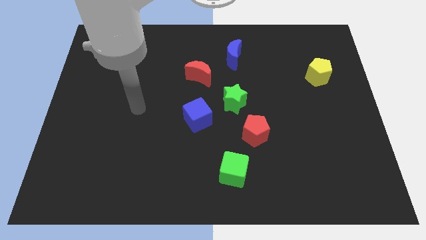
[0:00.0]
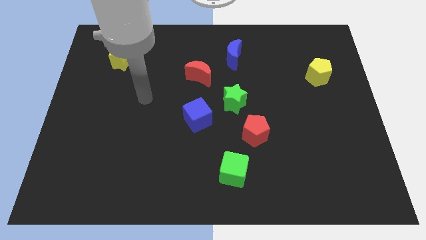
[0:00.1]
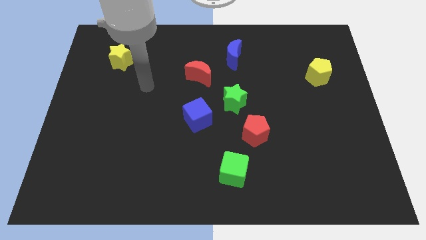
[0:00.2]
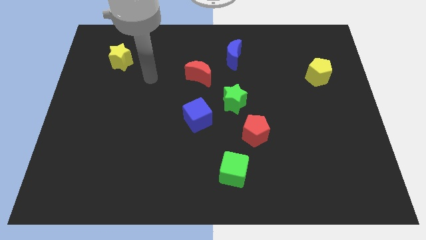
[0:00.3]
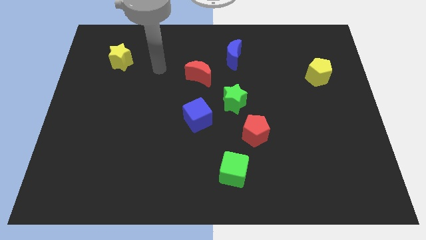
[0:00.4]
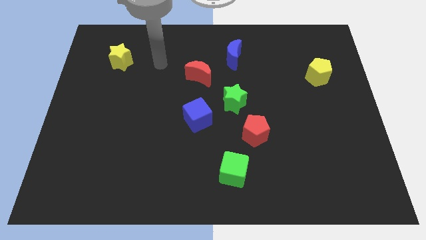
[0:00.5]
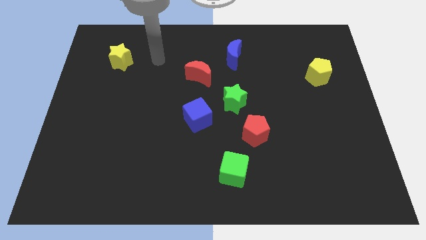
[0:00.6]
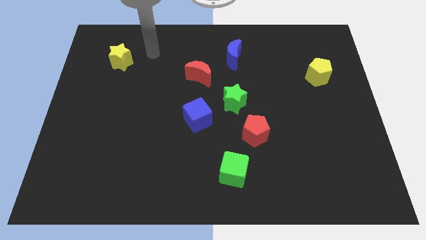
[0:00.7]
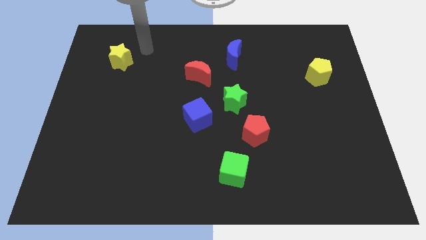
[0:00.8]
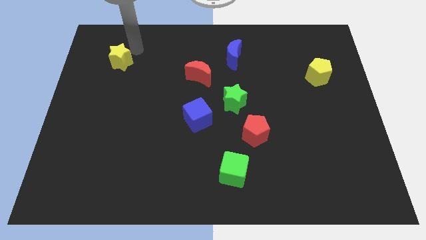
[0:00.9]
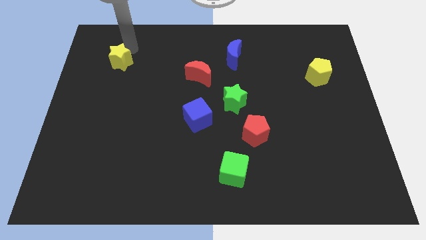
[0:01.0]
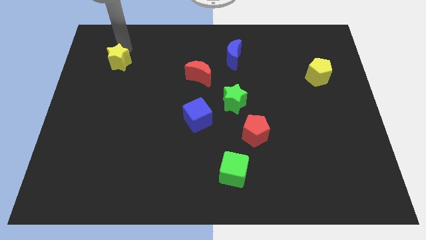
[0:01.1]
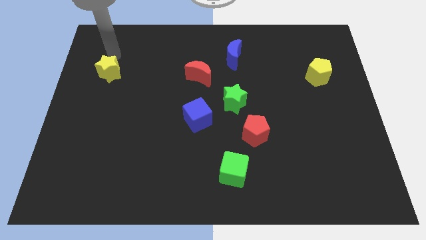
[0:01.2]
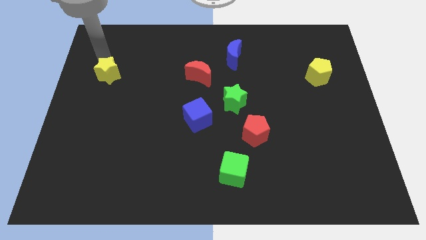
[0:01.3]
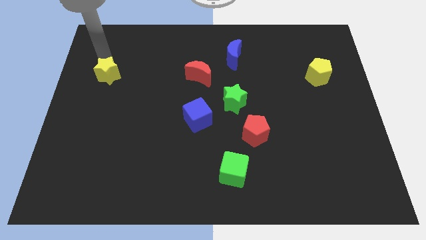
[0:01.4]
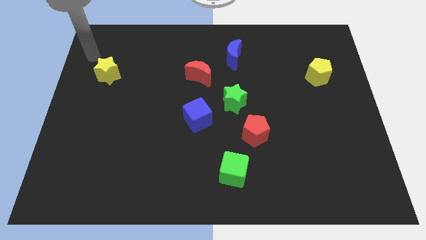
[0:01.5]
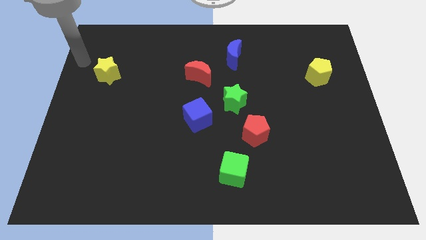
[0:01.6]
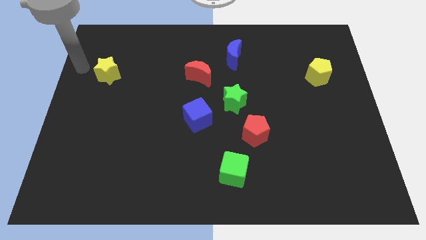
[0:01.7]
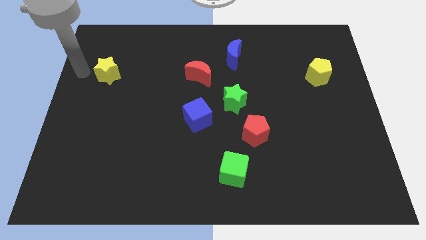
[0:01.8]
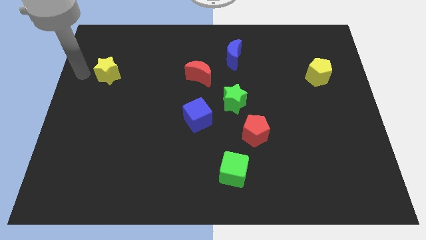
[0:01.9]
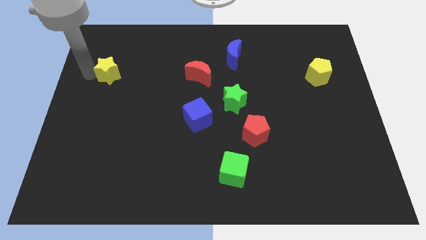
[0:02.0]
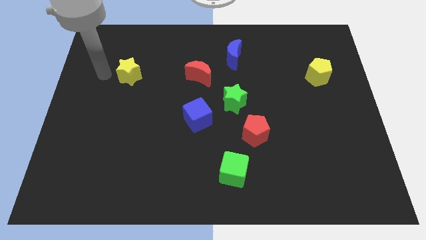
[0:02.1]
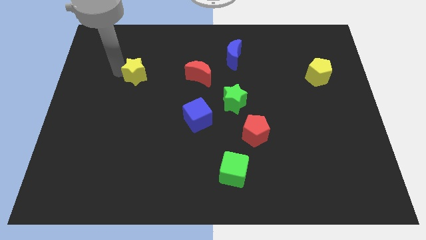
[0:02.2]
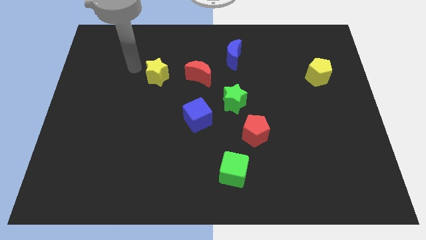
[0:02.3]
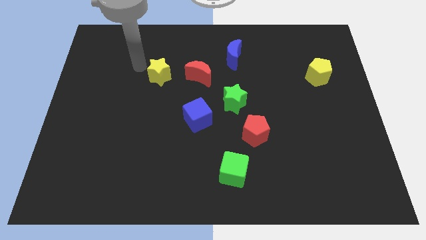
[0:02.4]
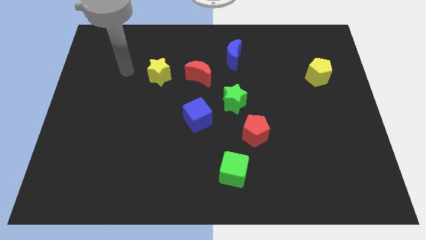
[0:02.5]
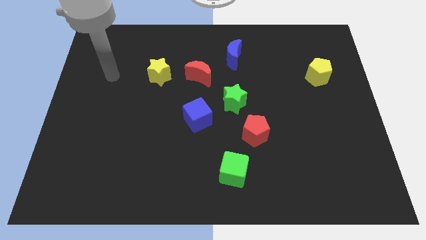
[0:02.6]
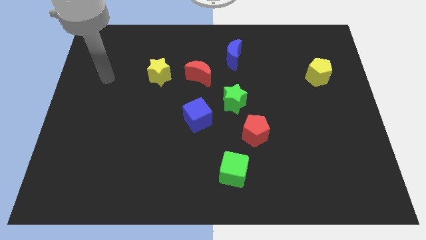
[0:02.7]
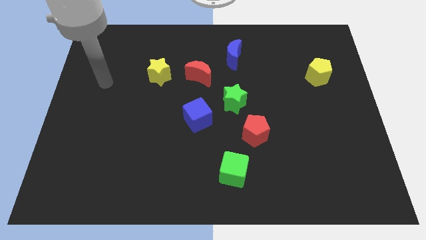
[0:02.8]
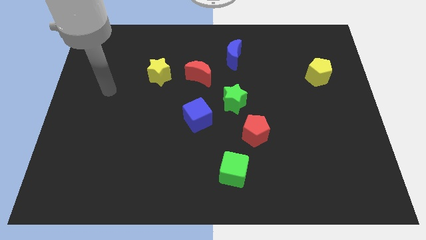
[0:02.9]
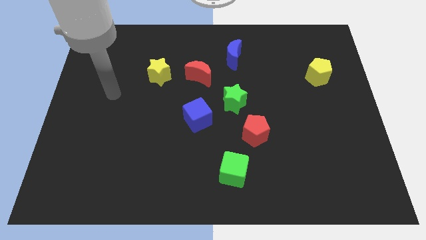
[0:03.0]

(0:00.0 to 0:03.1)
push the yellow star to the left of red moon

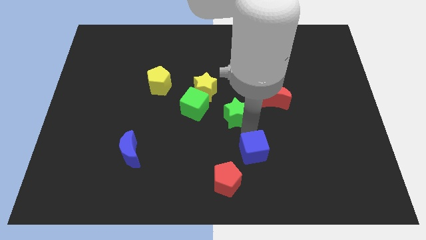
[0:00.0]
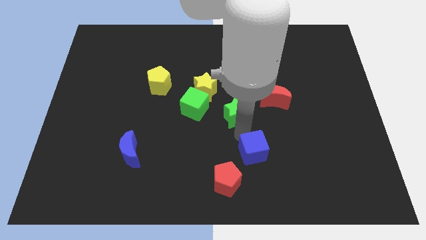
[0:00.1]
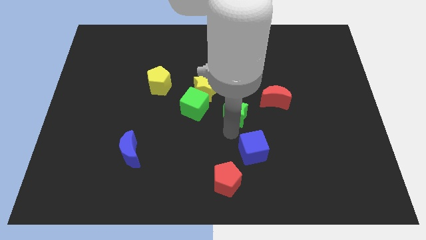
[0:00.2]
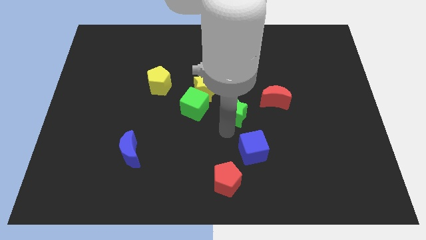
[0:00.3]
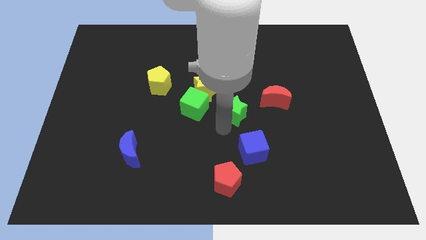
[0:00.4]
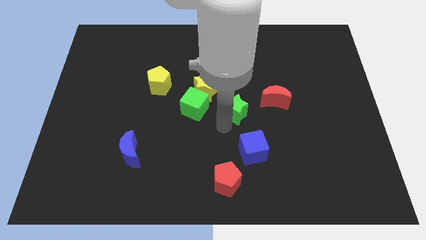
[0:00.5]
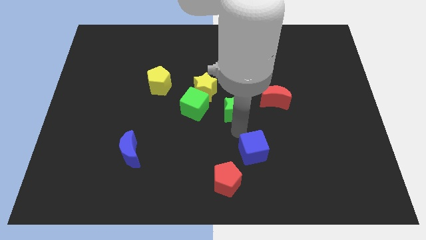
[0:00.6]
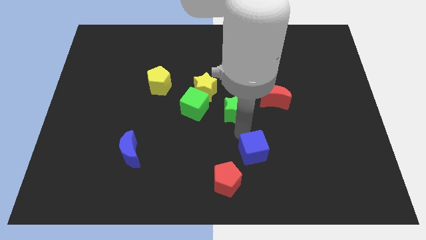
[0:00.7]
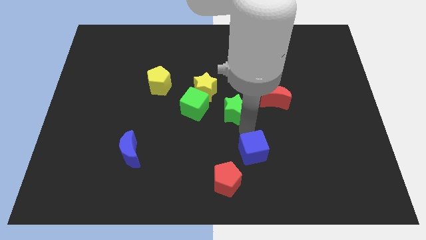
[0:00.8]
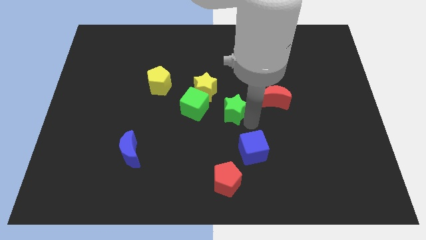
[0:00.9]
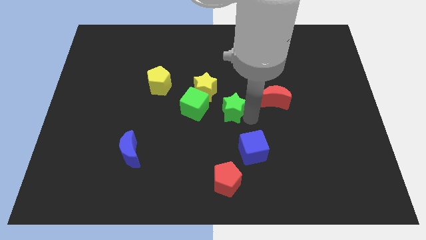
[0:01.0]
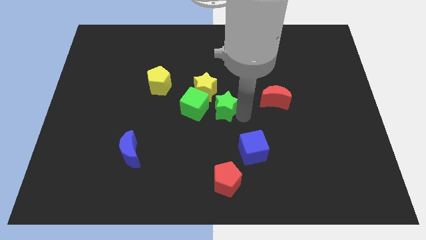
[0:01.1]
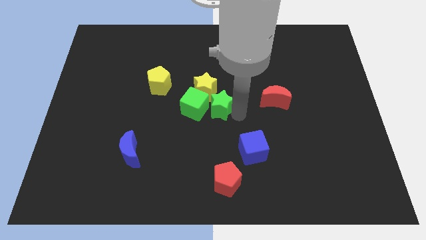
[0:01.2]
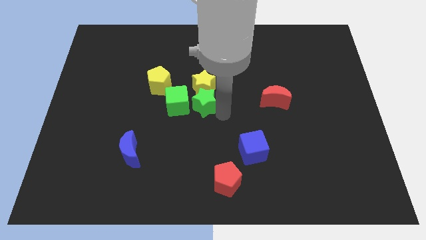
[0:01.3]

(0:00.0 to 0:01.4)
move the green star touch the bottom sides of the green cube and yellow star

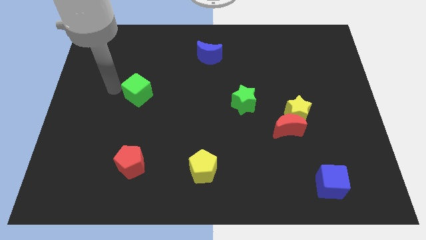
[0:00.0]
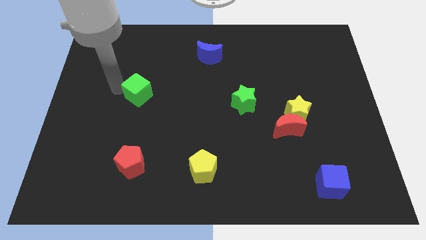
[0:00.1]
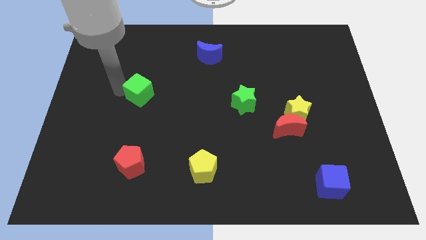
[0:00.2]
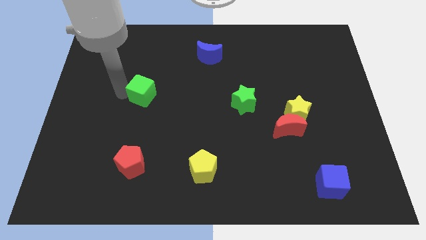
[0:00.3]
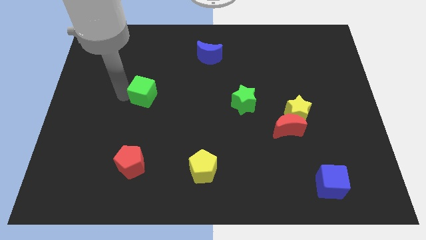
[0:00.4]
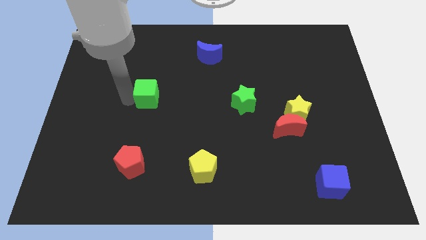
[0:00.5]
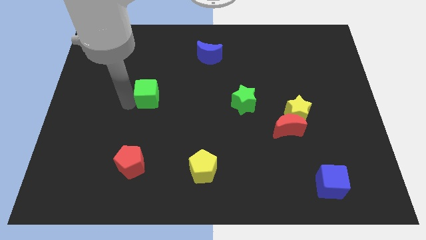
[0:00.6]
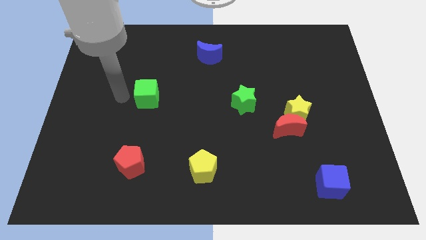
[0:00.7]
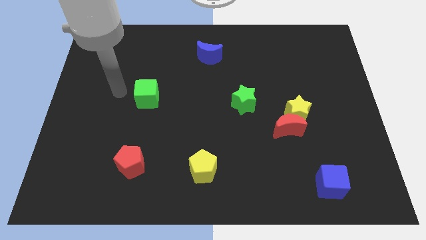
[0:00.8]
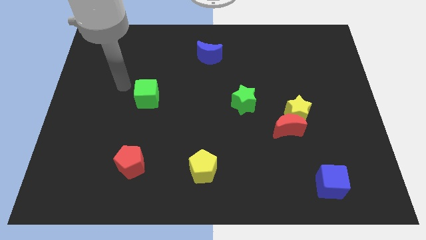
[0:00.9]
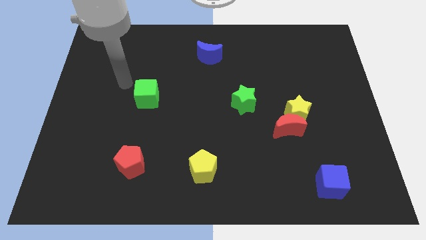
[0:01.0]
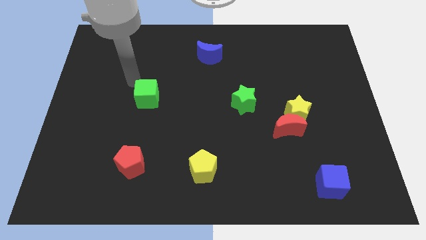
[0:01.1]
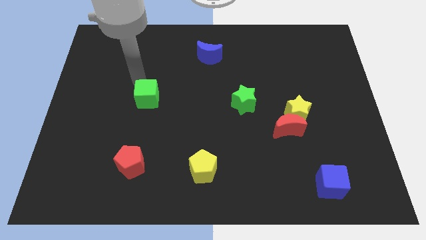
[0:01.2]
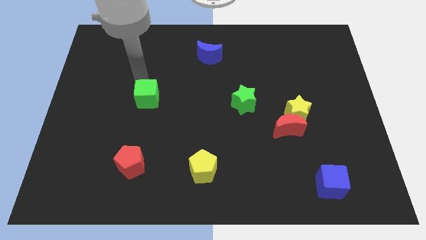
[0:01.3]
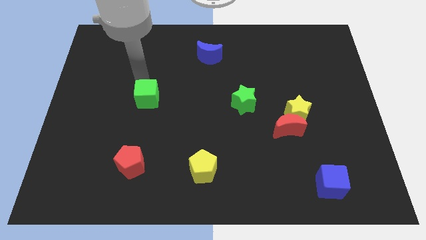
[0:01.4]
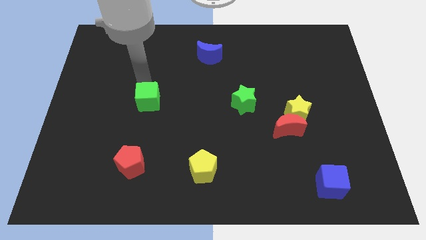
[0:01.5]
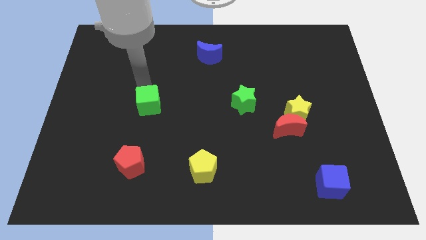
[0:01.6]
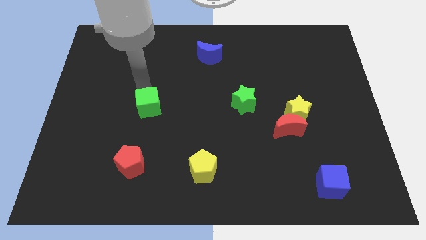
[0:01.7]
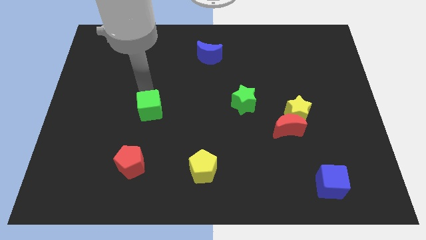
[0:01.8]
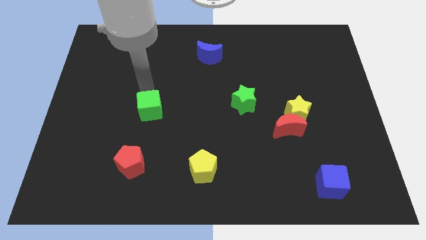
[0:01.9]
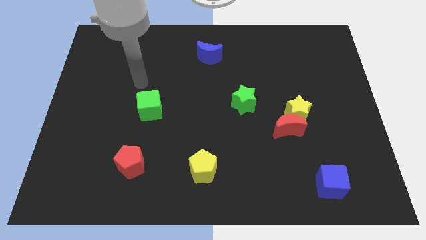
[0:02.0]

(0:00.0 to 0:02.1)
push the green cube towards the top side of the red pentagon

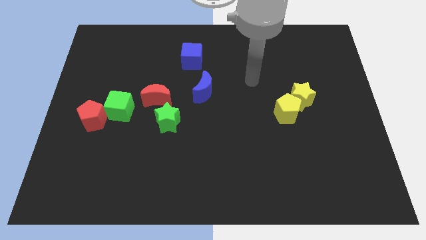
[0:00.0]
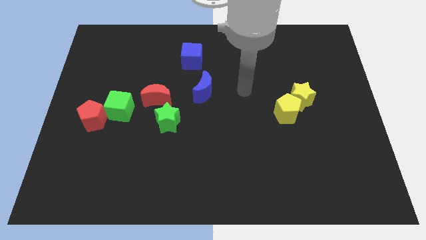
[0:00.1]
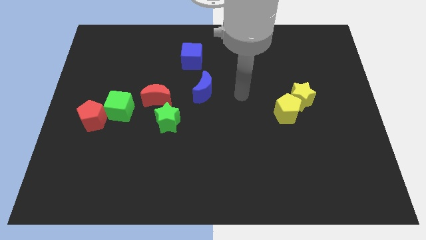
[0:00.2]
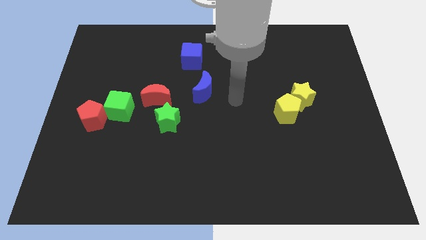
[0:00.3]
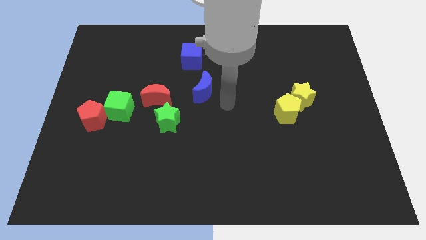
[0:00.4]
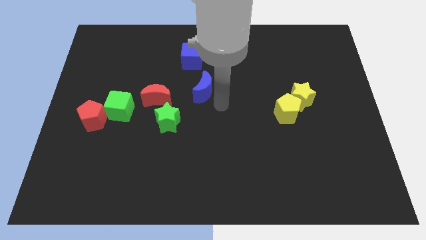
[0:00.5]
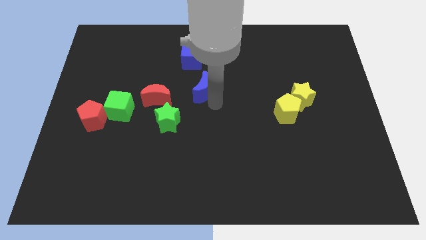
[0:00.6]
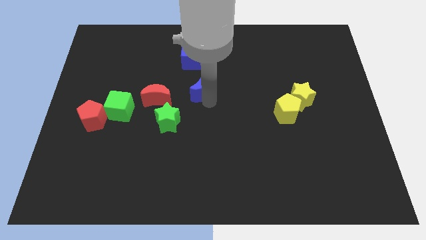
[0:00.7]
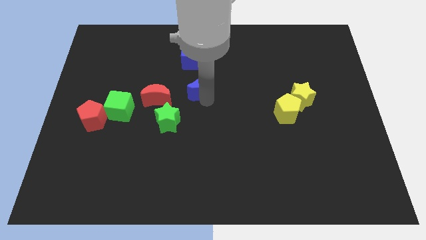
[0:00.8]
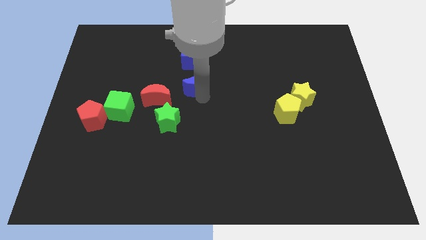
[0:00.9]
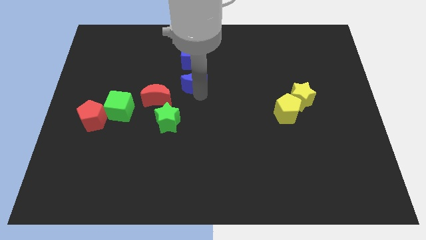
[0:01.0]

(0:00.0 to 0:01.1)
move blue moon towards blue cube

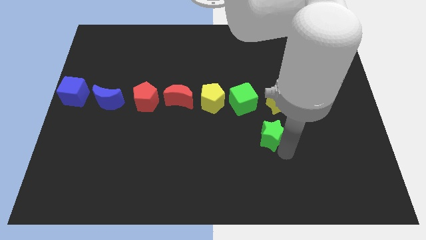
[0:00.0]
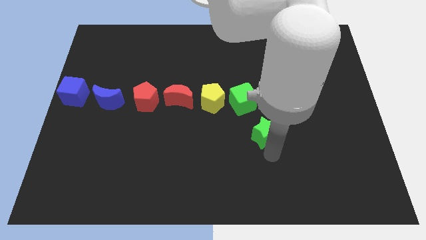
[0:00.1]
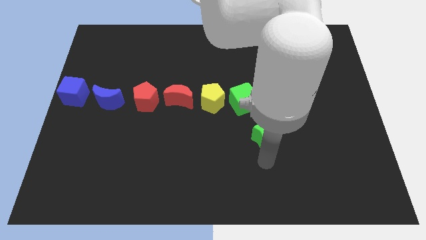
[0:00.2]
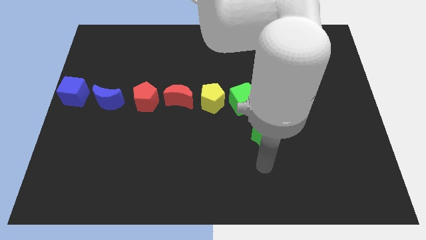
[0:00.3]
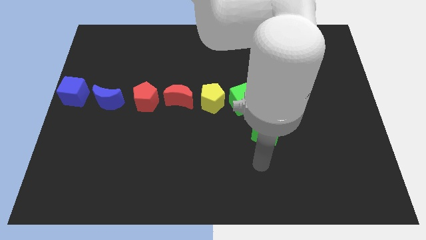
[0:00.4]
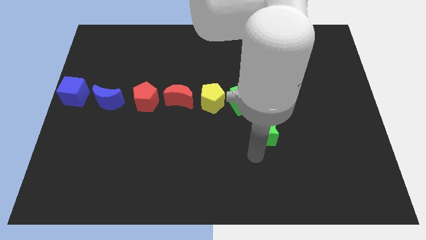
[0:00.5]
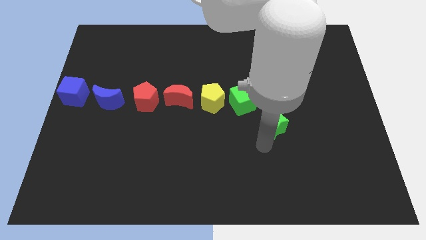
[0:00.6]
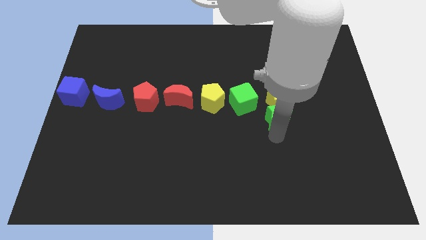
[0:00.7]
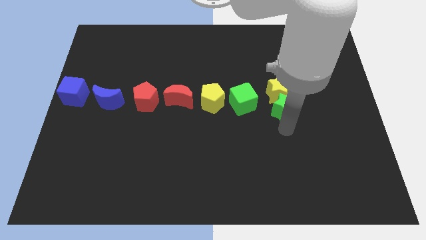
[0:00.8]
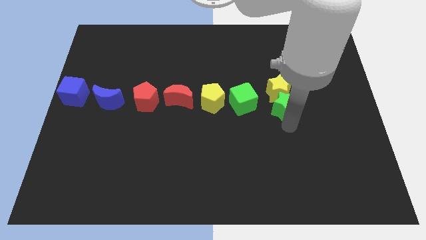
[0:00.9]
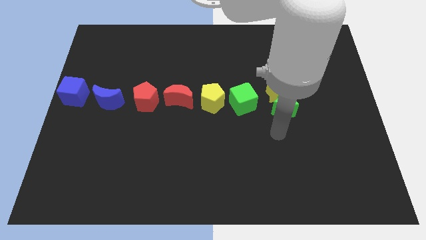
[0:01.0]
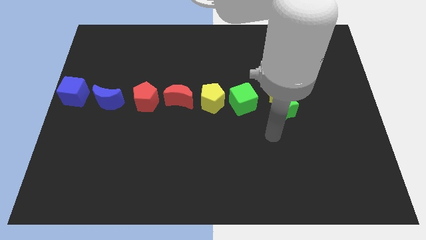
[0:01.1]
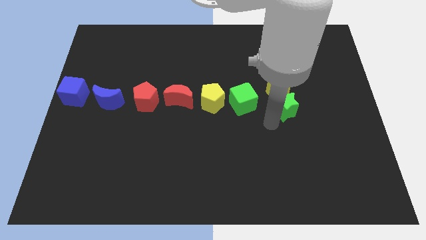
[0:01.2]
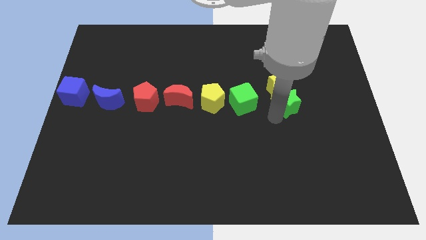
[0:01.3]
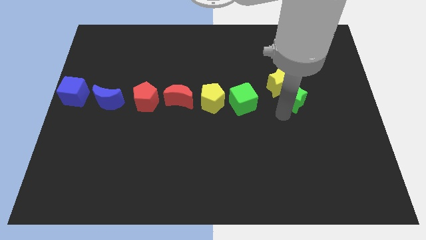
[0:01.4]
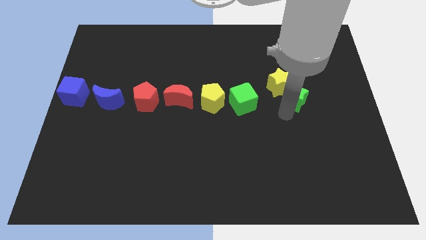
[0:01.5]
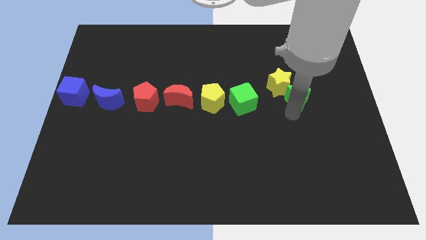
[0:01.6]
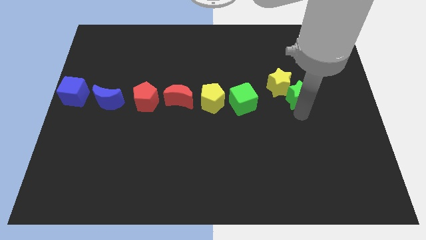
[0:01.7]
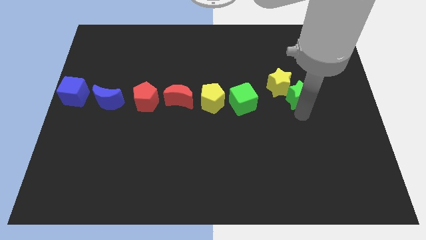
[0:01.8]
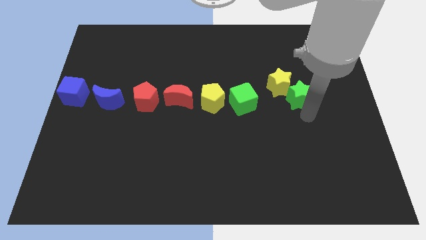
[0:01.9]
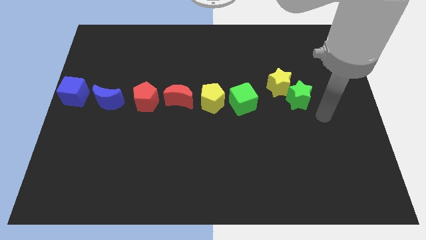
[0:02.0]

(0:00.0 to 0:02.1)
push the green star into yellow star
